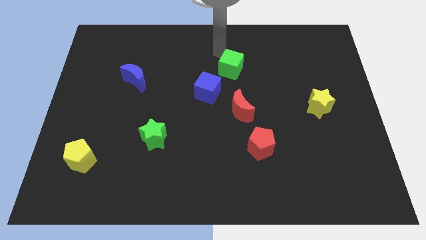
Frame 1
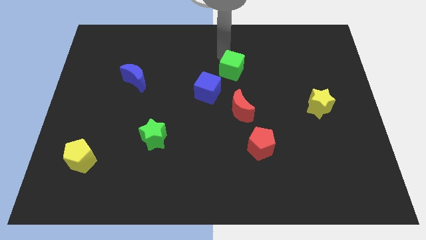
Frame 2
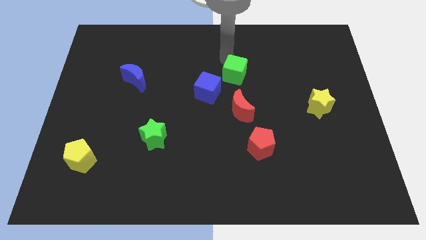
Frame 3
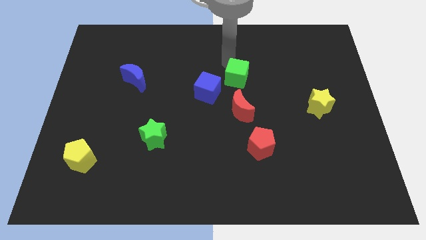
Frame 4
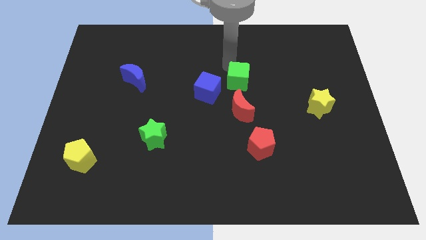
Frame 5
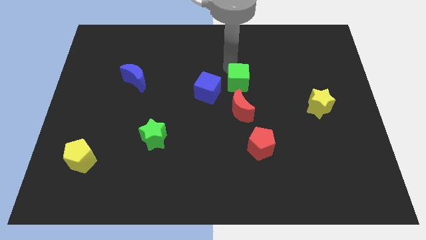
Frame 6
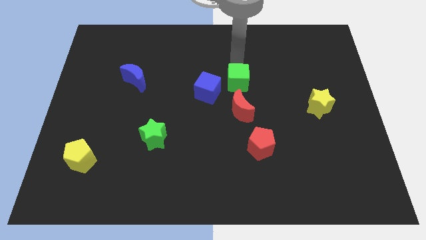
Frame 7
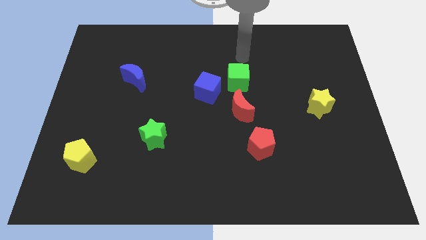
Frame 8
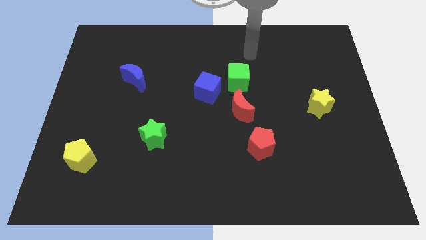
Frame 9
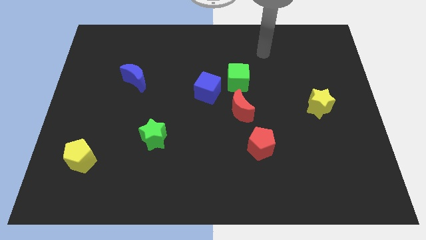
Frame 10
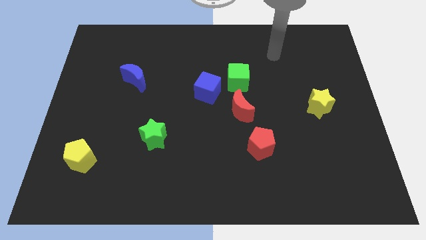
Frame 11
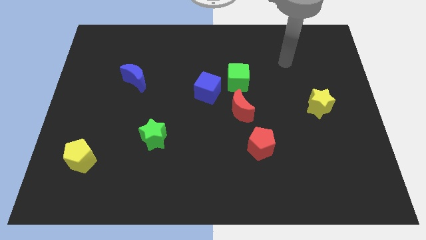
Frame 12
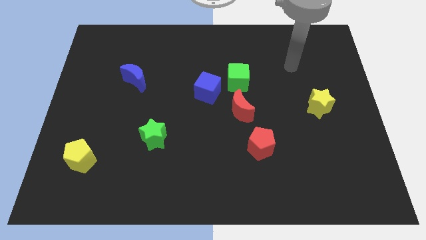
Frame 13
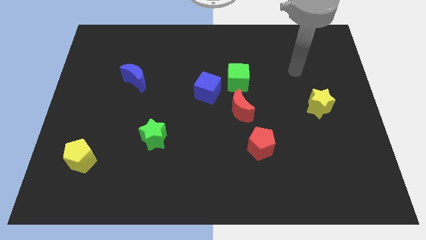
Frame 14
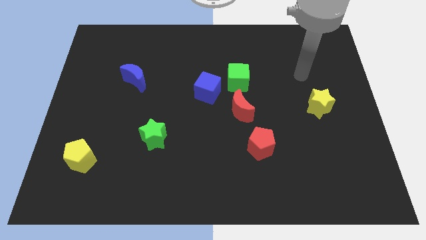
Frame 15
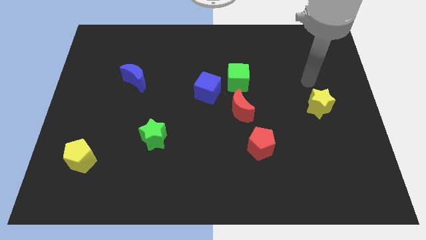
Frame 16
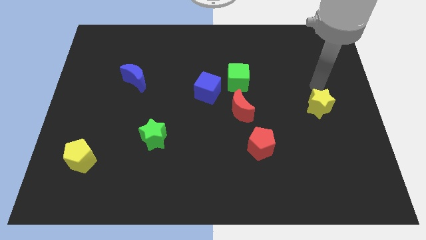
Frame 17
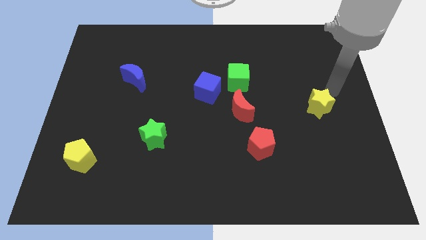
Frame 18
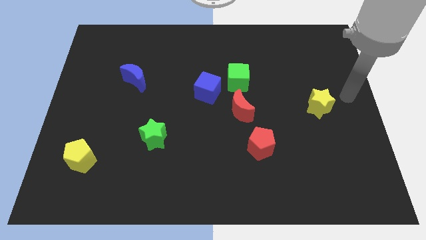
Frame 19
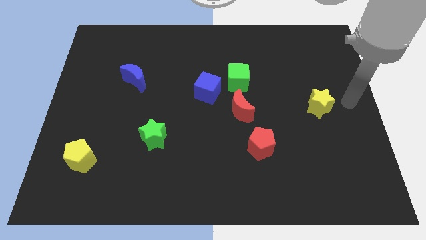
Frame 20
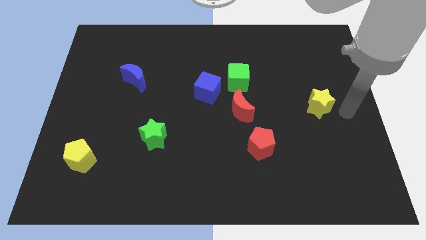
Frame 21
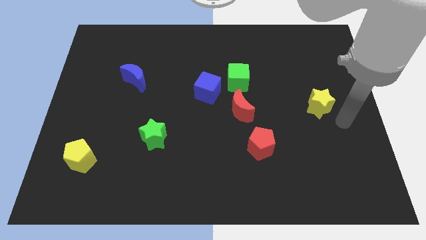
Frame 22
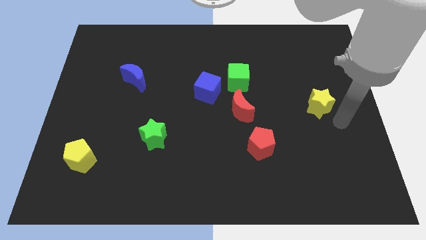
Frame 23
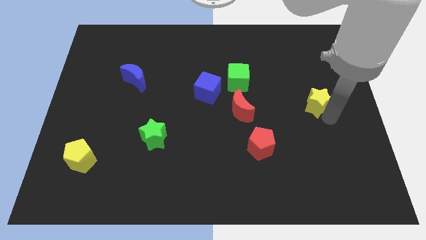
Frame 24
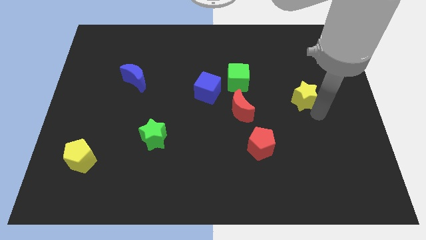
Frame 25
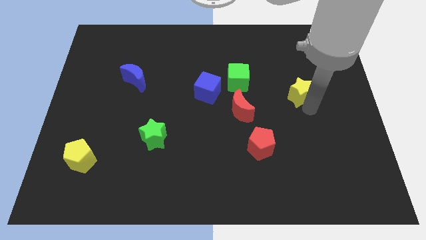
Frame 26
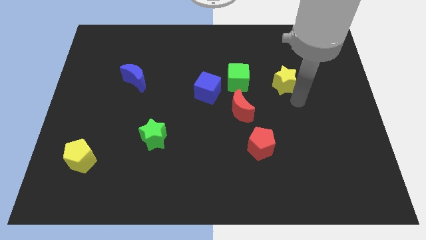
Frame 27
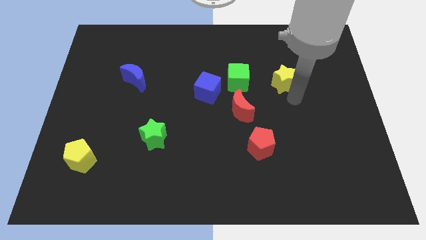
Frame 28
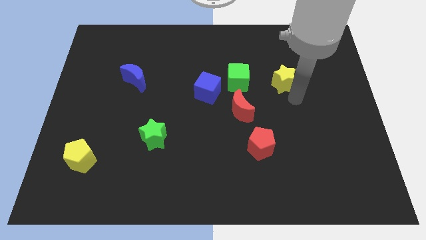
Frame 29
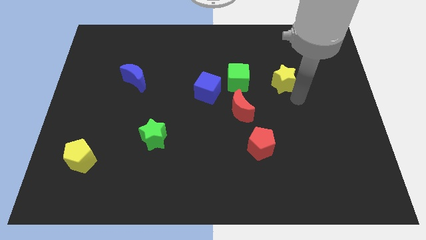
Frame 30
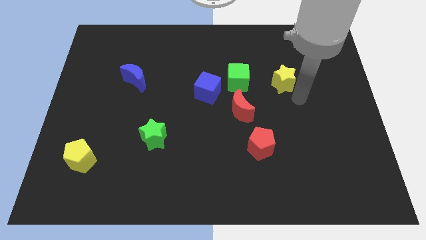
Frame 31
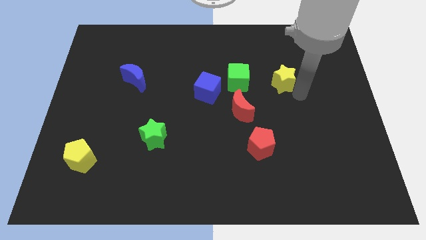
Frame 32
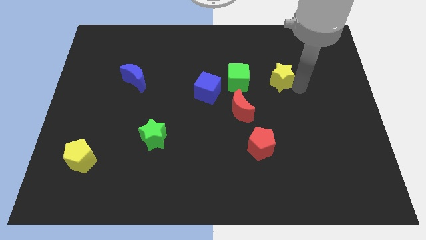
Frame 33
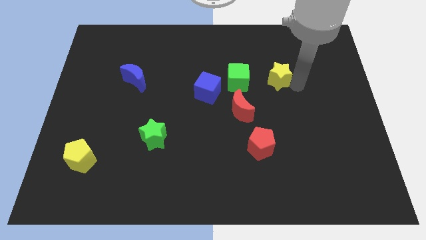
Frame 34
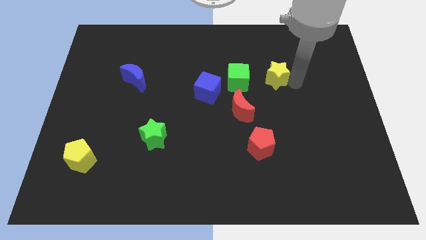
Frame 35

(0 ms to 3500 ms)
push the yellow star parallel right to the green cube

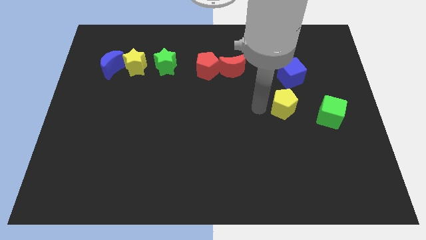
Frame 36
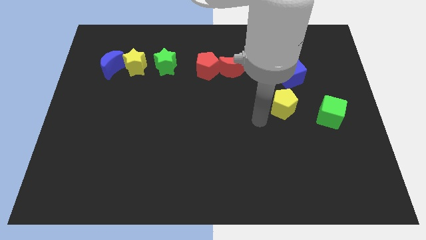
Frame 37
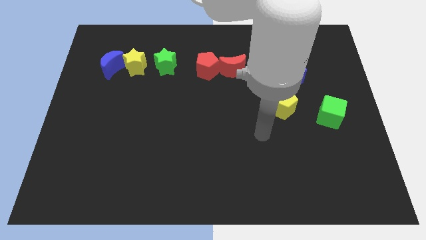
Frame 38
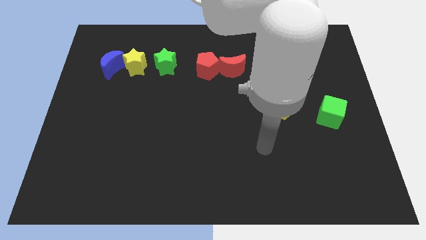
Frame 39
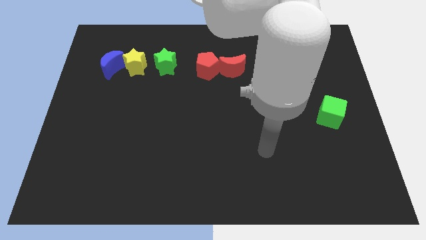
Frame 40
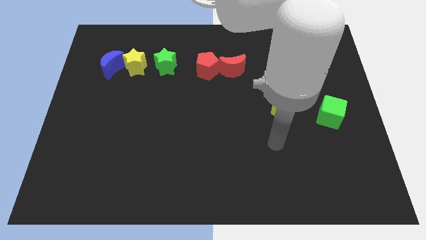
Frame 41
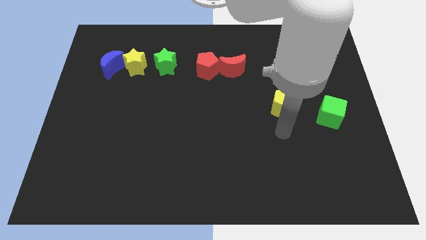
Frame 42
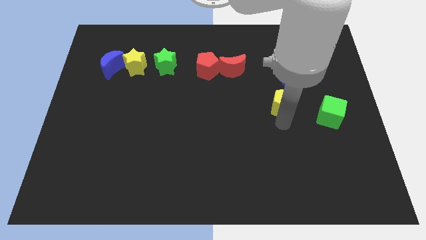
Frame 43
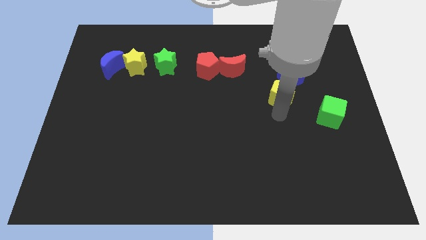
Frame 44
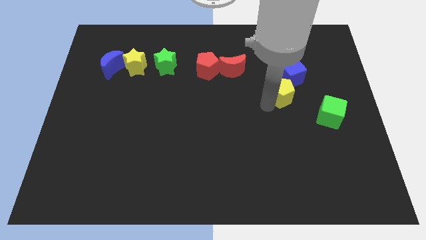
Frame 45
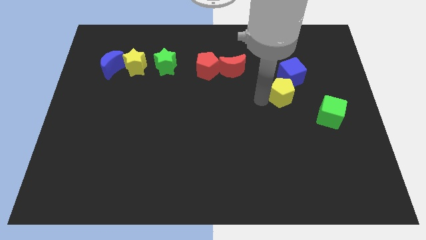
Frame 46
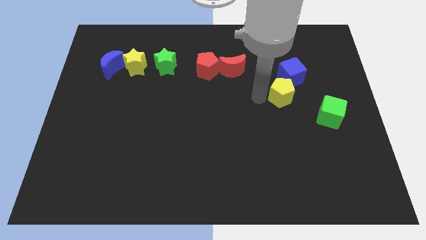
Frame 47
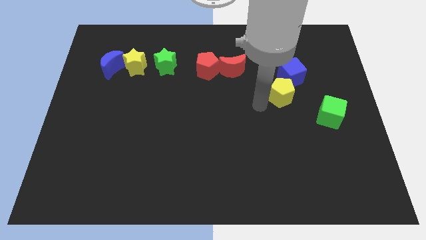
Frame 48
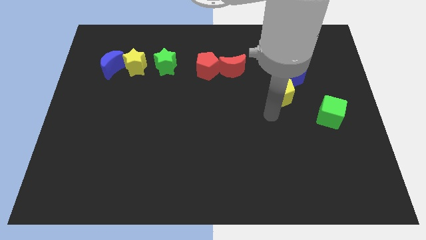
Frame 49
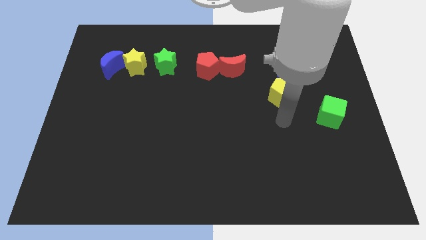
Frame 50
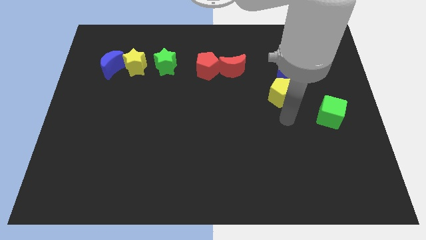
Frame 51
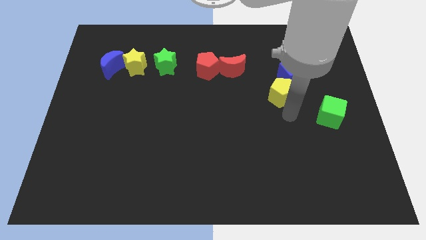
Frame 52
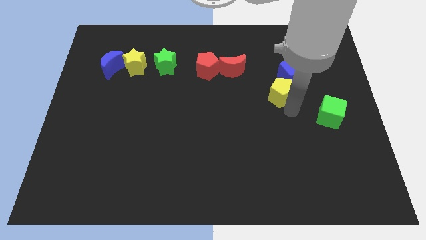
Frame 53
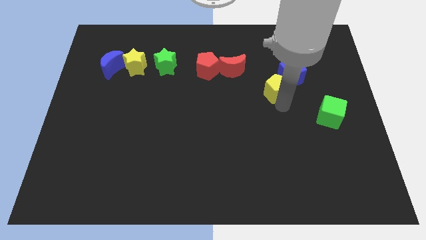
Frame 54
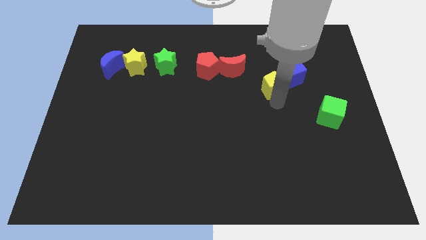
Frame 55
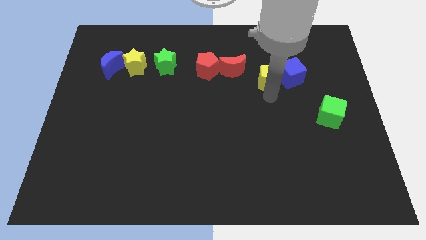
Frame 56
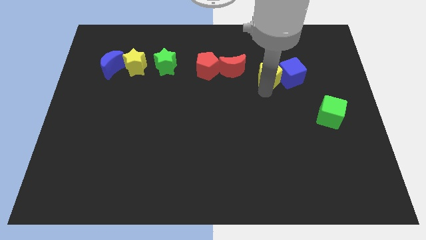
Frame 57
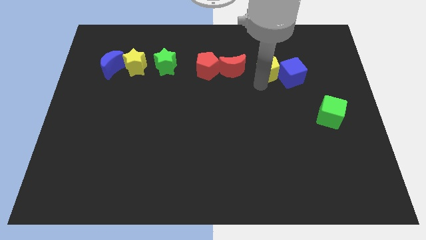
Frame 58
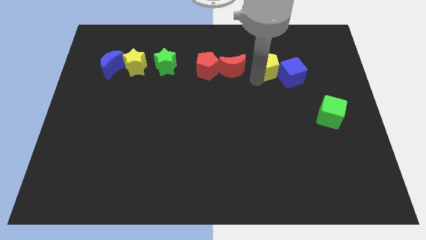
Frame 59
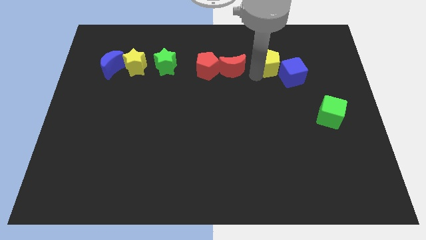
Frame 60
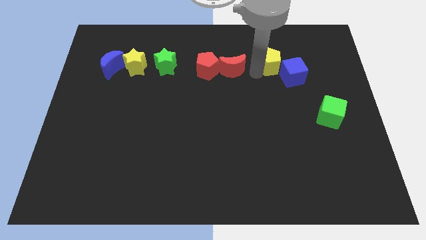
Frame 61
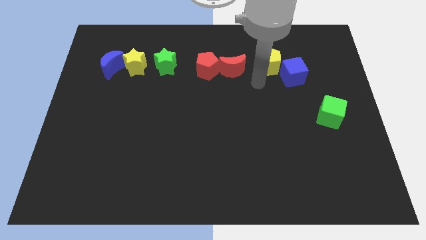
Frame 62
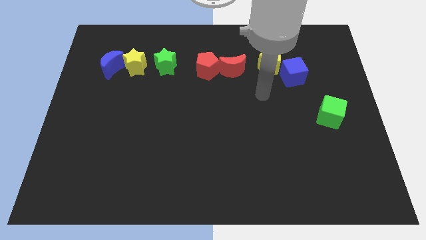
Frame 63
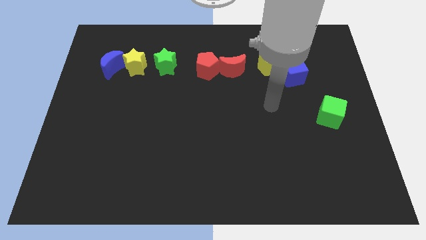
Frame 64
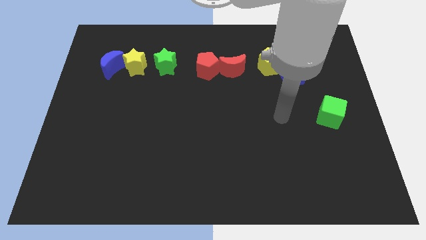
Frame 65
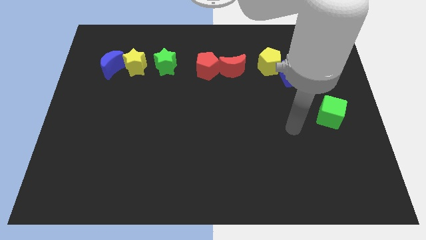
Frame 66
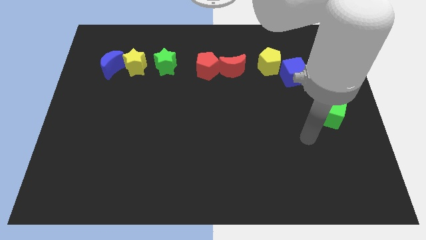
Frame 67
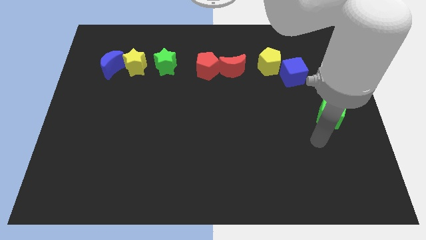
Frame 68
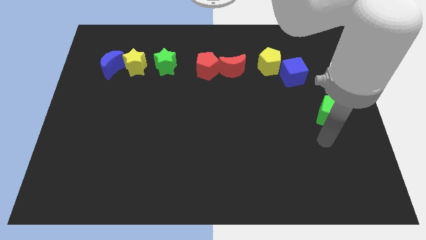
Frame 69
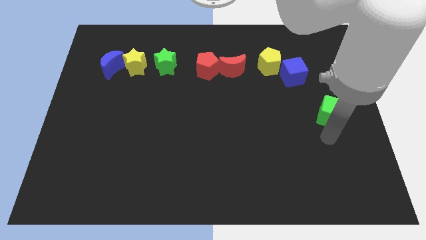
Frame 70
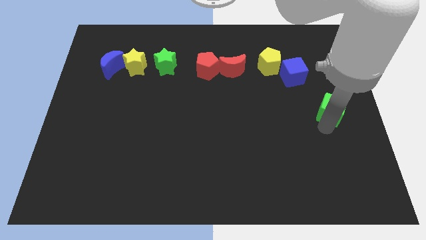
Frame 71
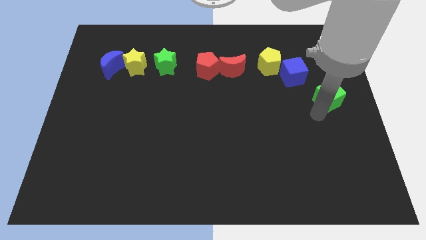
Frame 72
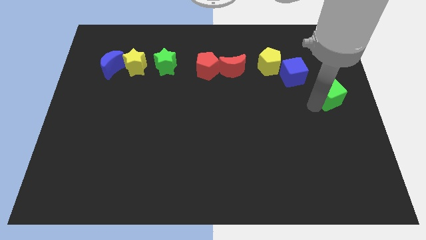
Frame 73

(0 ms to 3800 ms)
move green cube slightly up

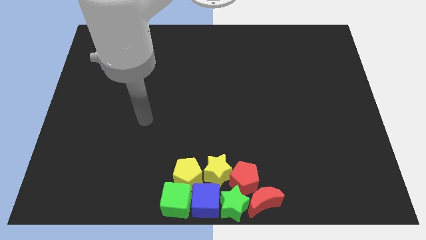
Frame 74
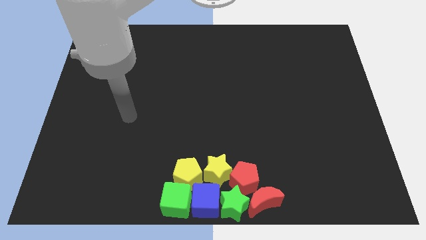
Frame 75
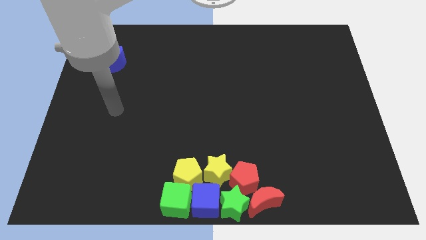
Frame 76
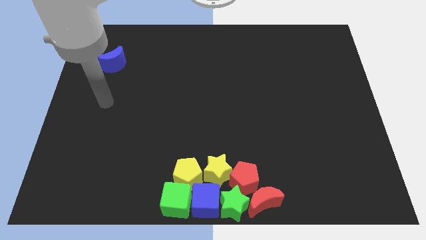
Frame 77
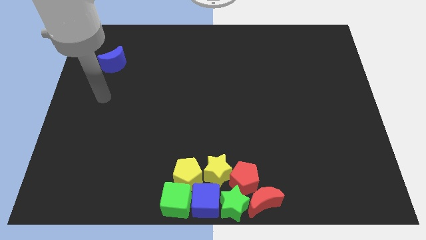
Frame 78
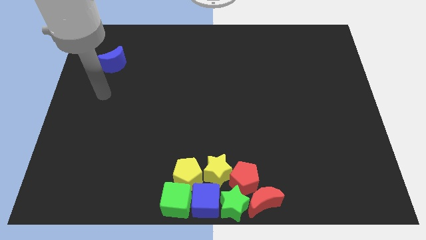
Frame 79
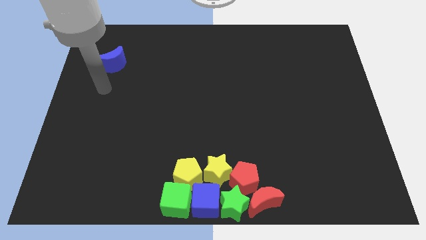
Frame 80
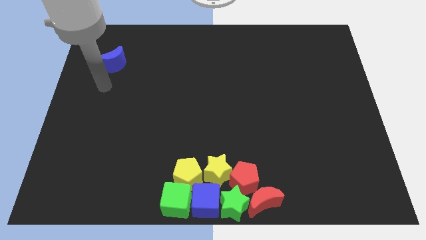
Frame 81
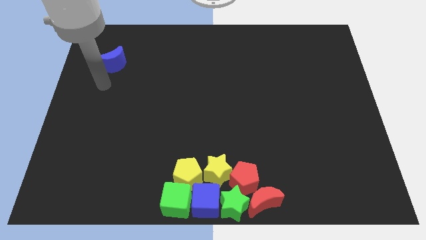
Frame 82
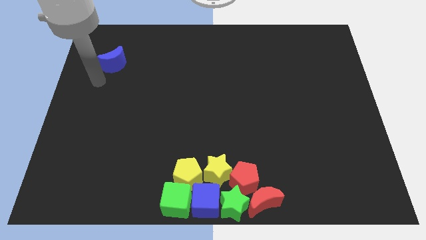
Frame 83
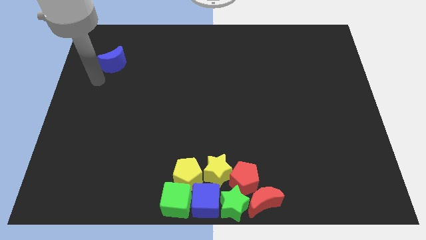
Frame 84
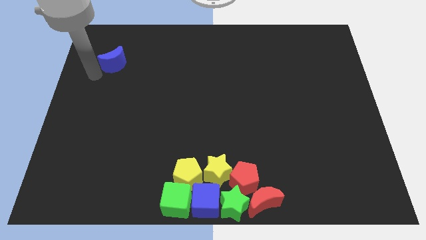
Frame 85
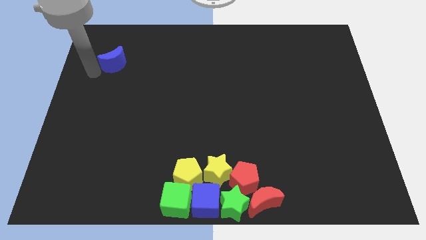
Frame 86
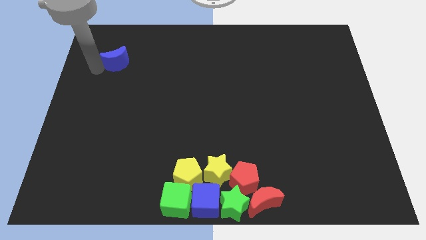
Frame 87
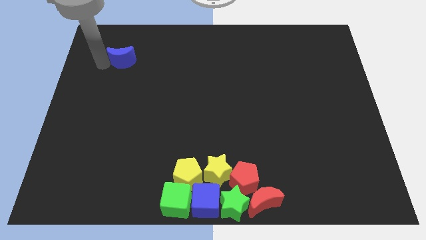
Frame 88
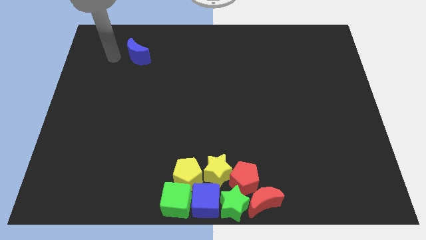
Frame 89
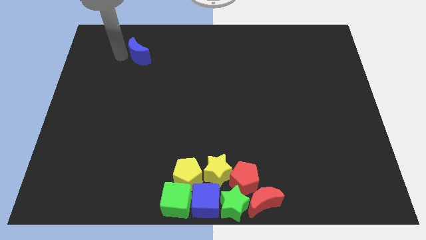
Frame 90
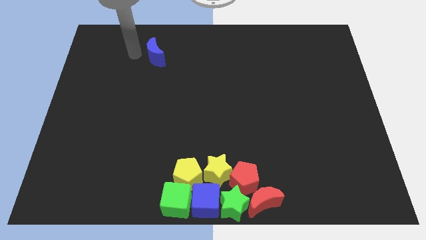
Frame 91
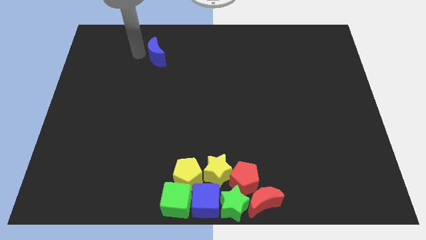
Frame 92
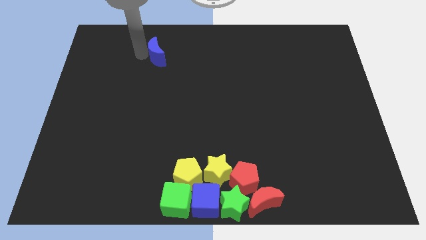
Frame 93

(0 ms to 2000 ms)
slide the blue crescent towards the top center of the board
